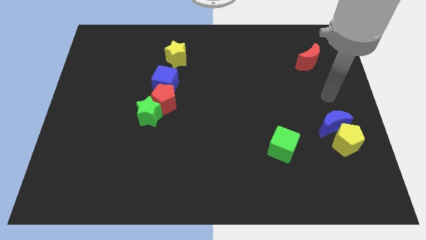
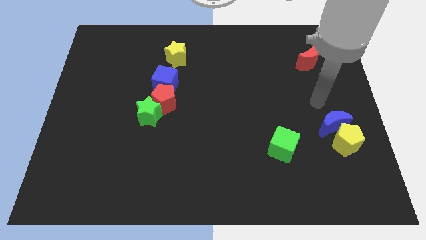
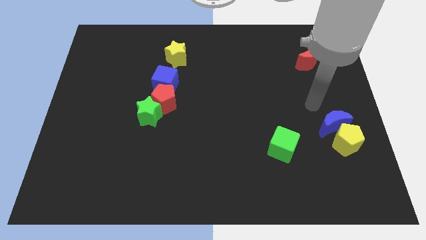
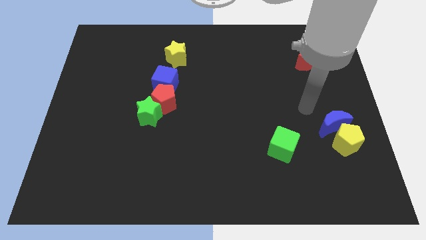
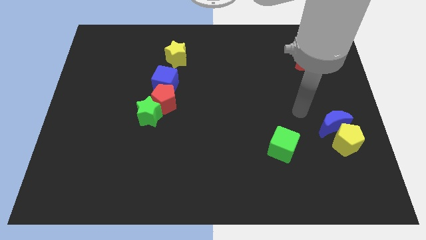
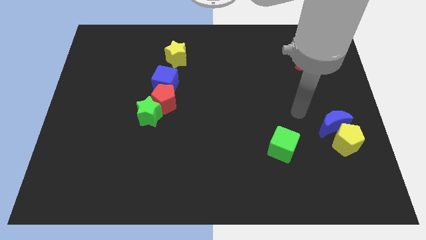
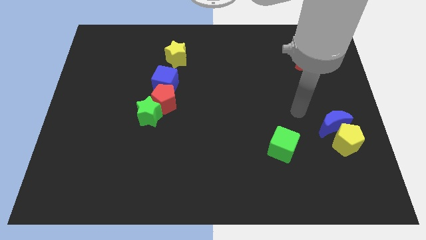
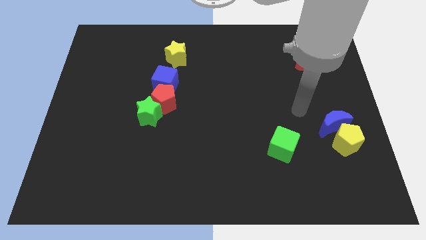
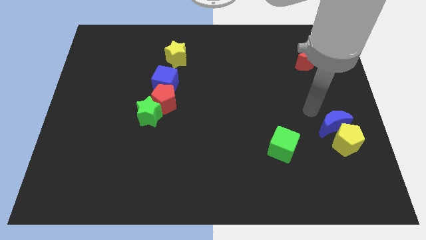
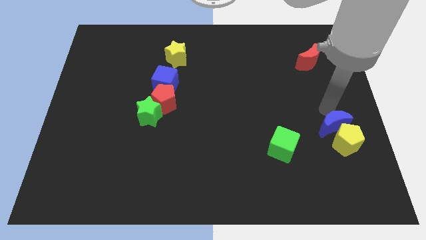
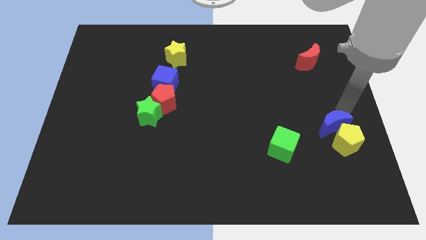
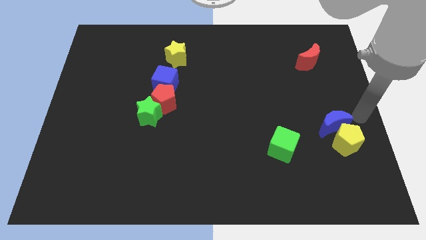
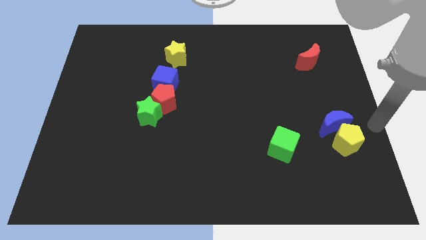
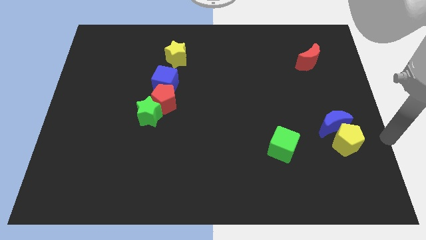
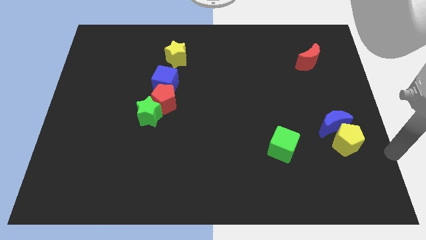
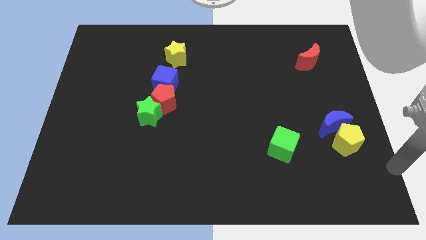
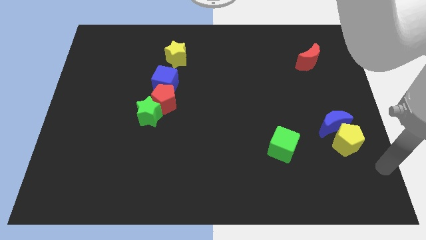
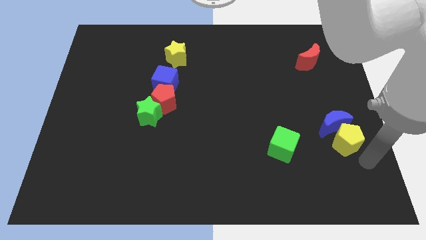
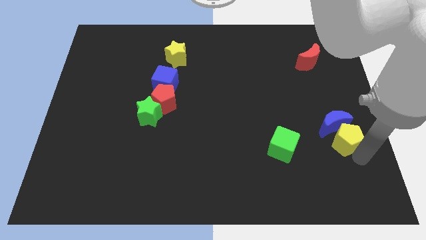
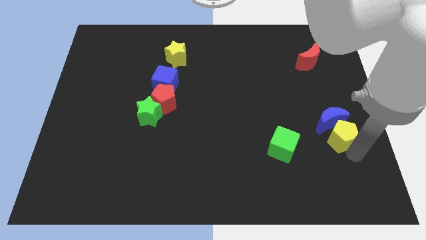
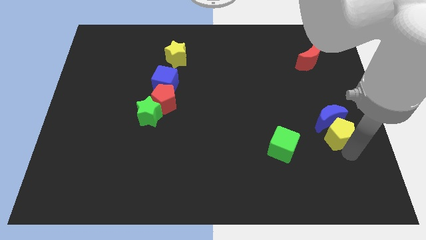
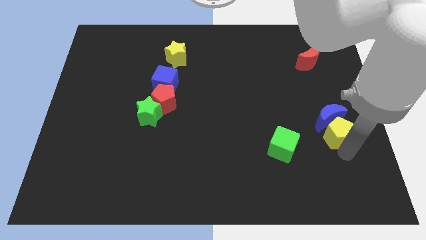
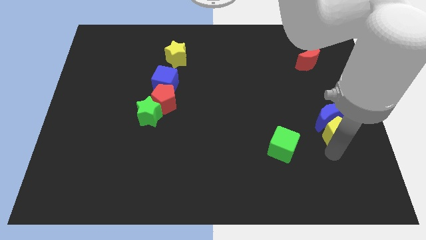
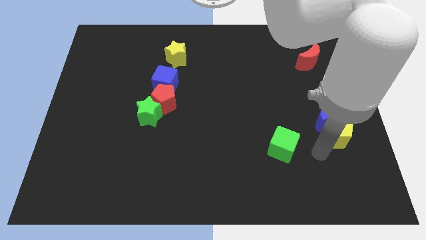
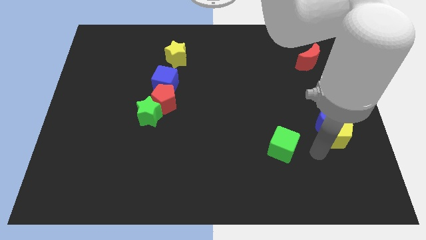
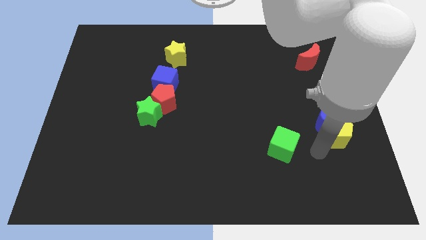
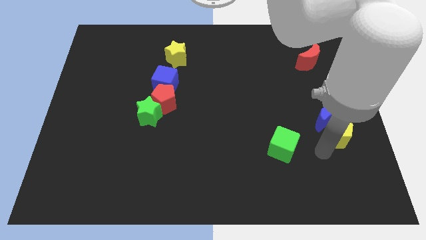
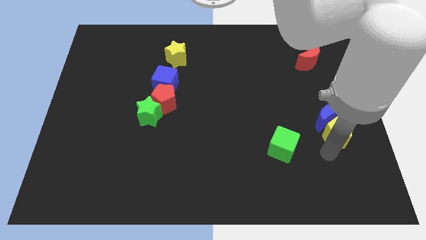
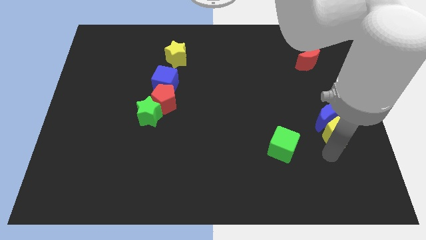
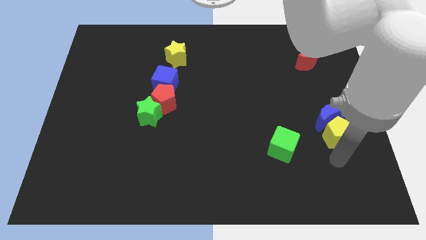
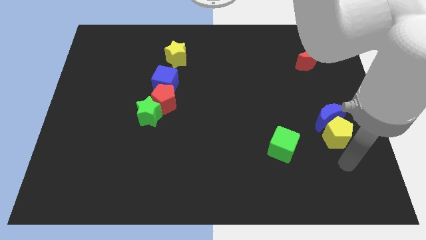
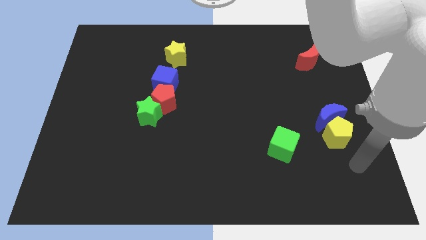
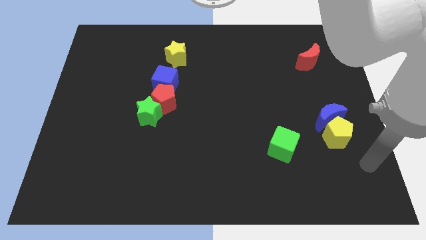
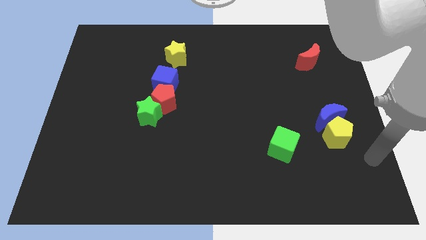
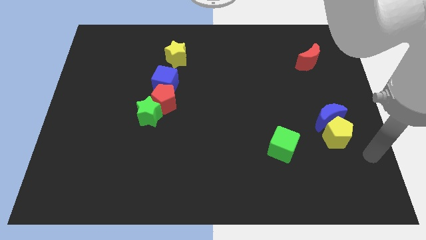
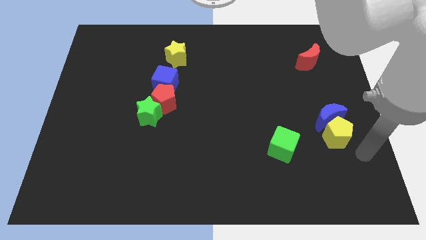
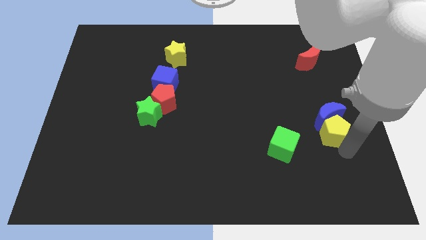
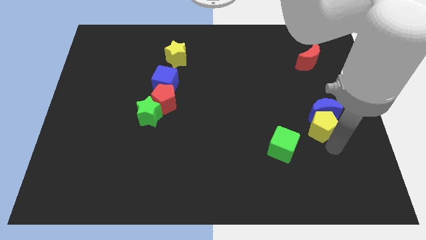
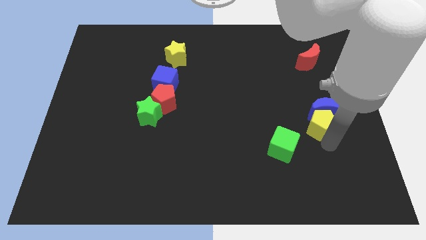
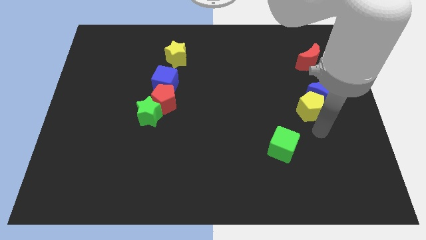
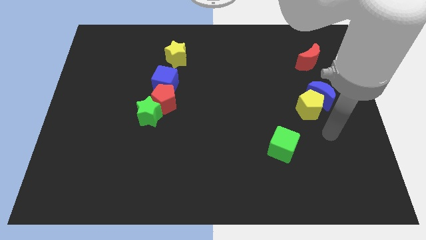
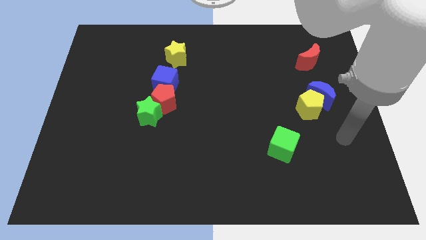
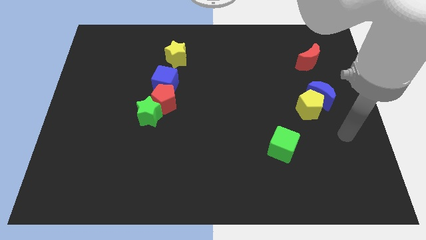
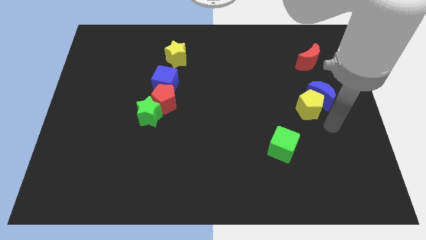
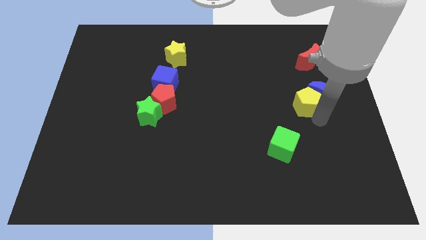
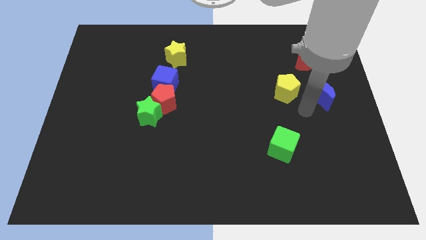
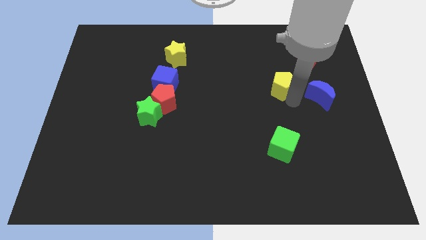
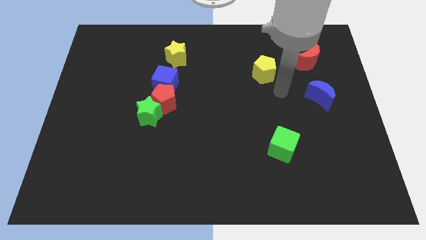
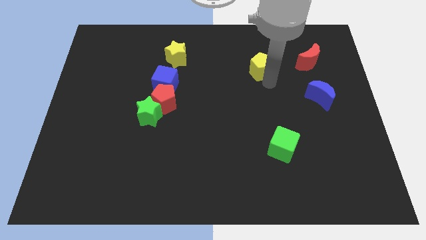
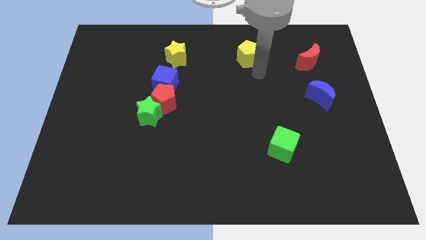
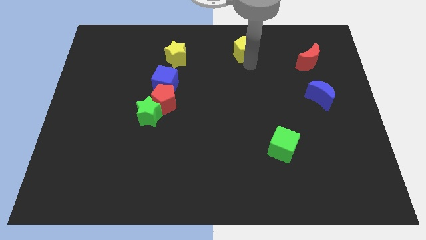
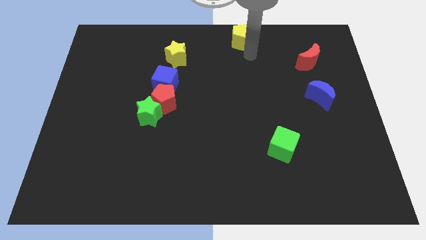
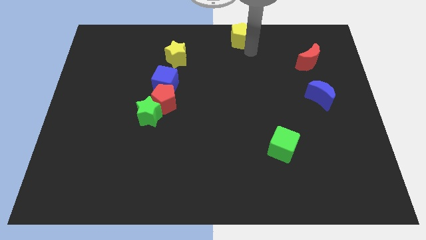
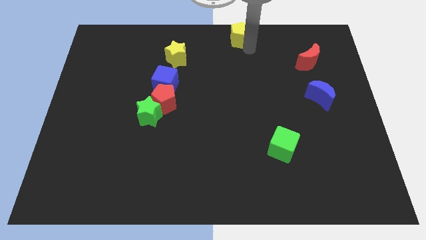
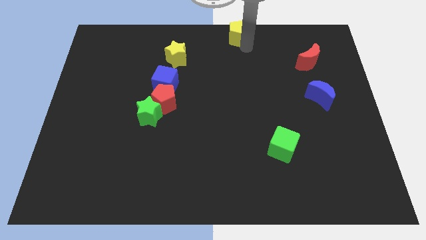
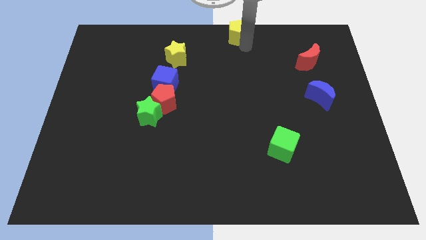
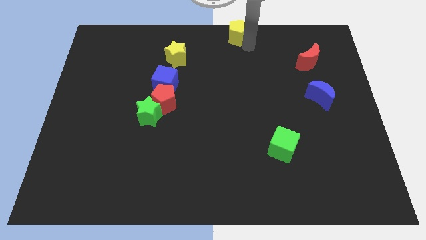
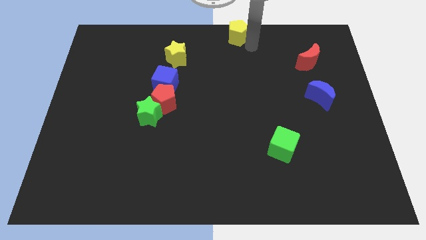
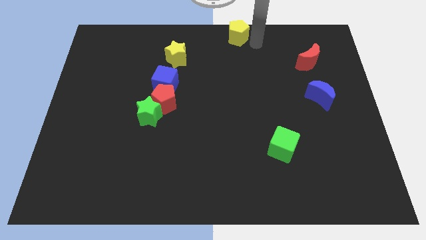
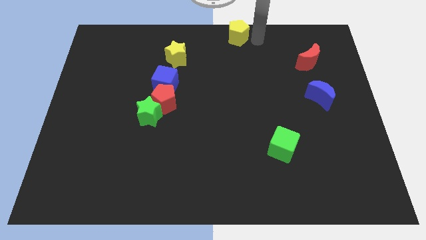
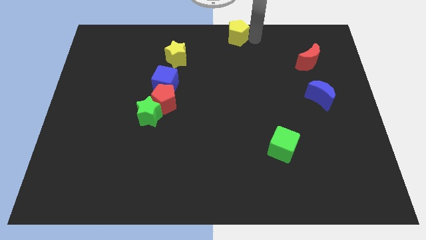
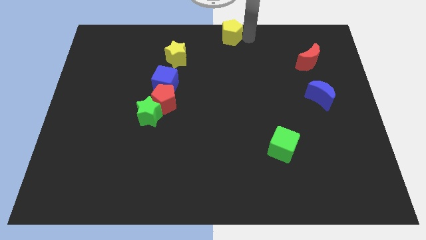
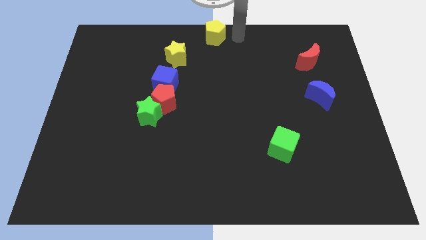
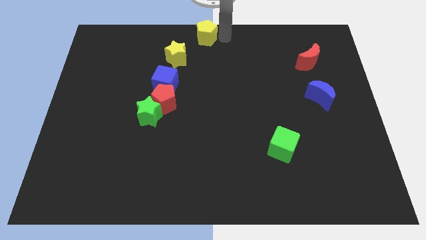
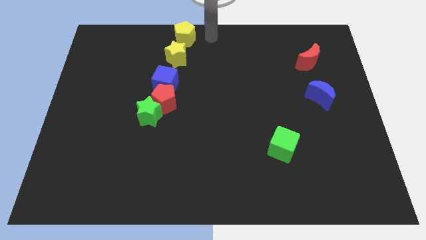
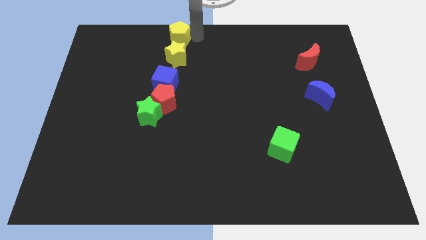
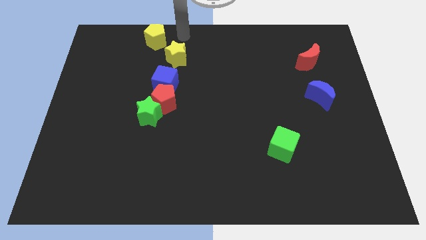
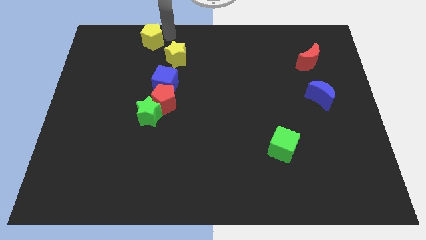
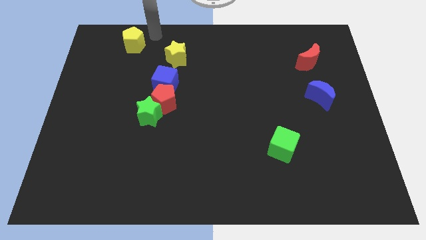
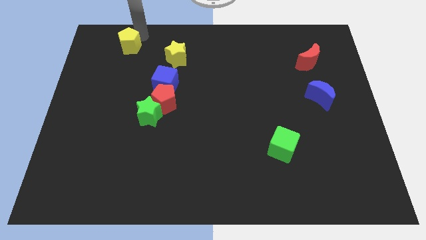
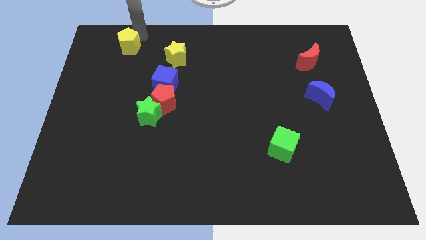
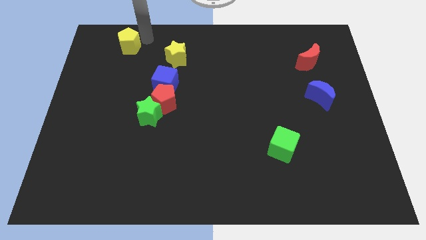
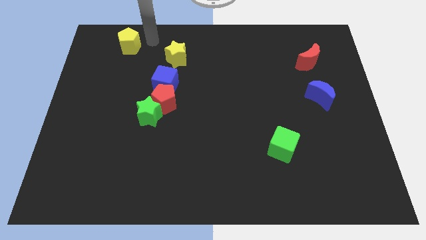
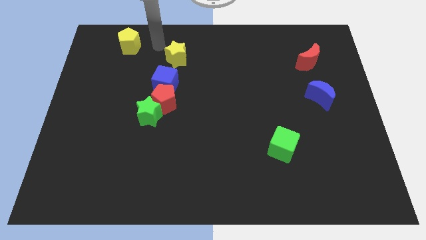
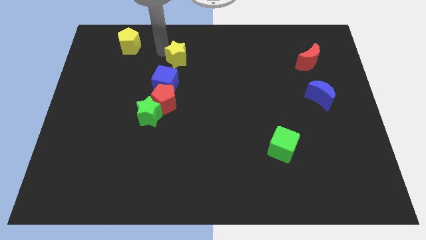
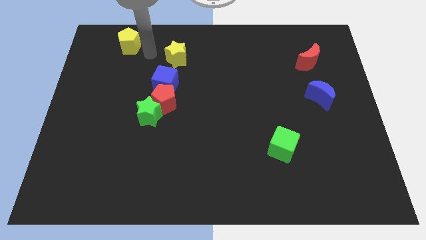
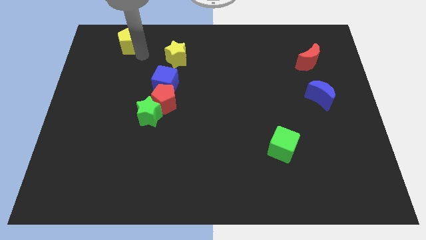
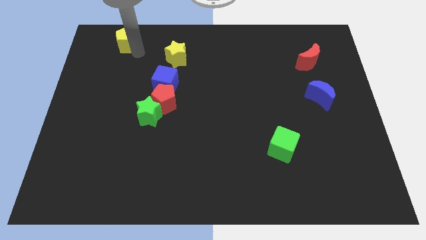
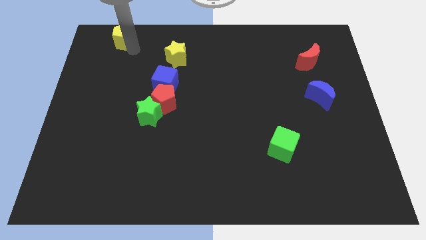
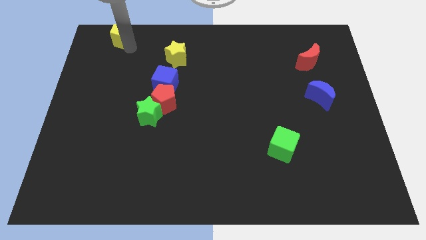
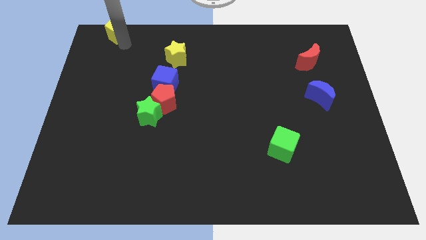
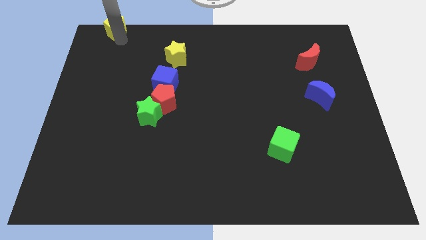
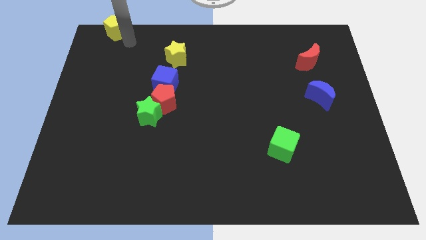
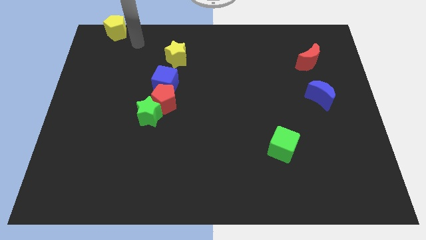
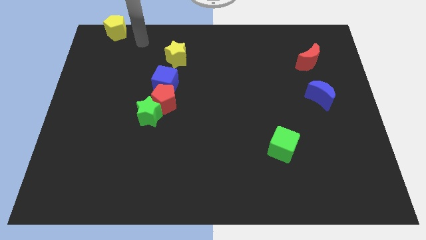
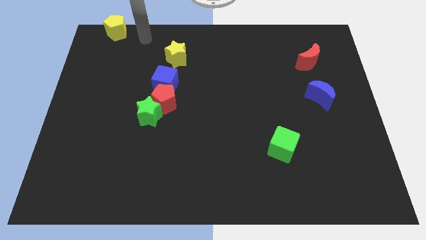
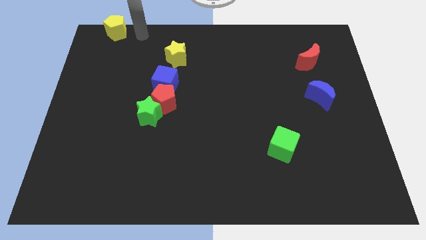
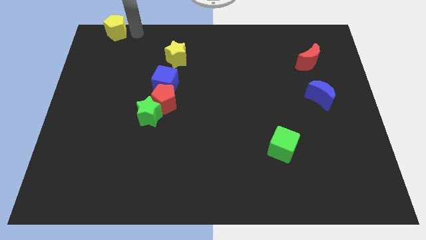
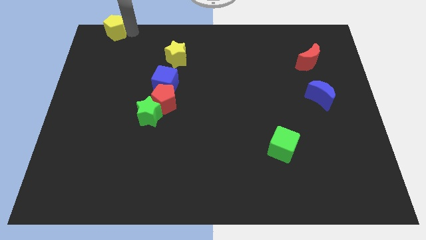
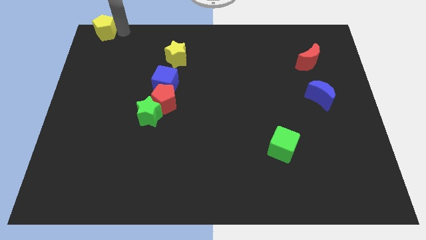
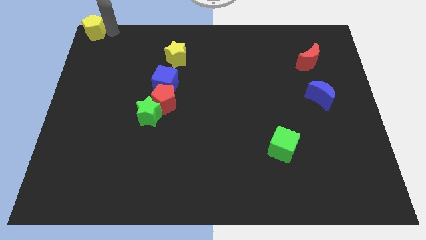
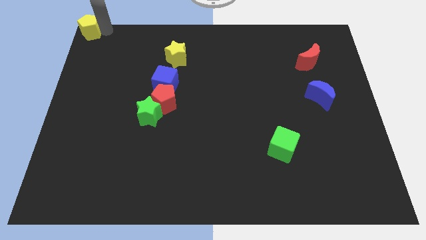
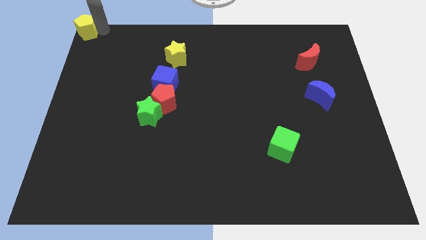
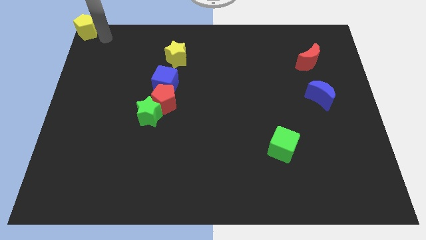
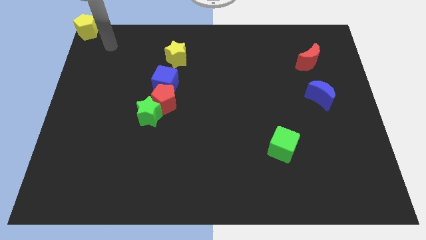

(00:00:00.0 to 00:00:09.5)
move the yellow pentagon to the top left corner of the board
